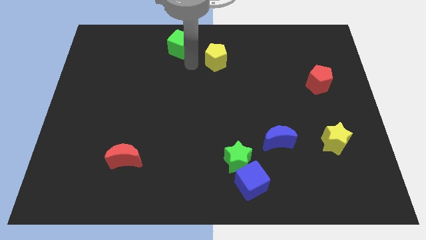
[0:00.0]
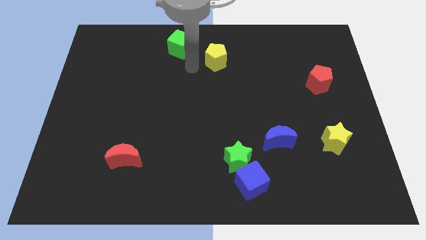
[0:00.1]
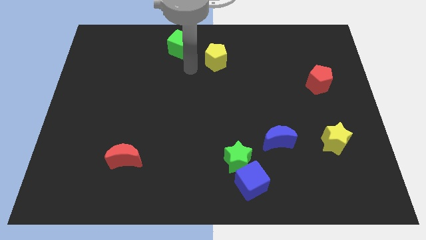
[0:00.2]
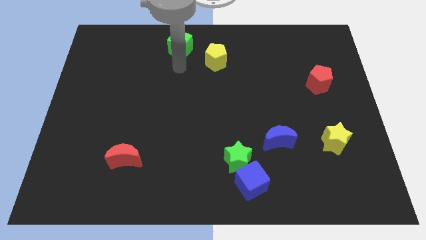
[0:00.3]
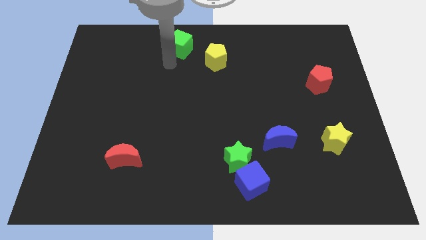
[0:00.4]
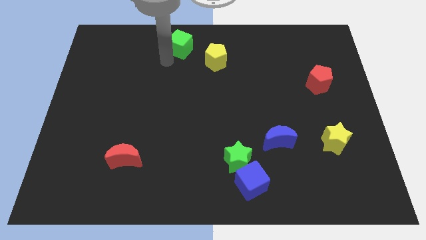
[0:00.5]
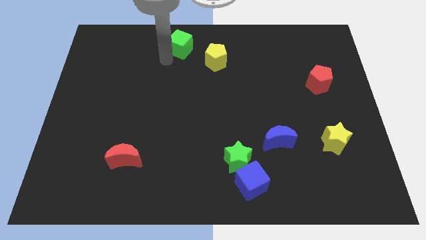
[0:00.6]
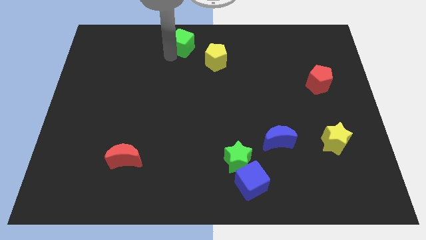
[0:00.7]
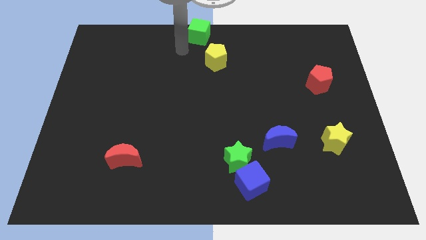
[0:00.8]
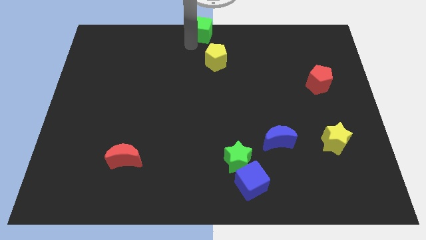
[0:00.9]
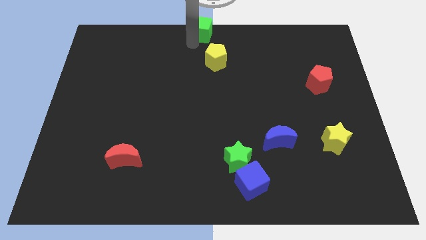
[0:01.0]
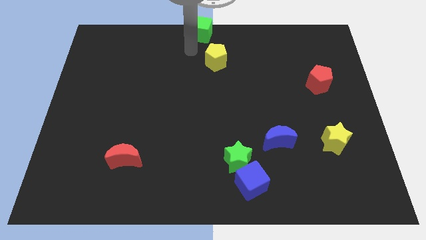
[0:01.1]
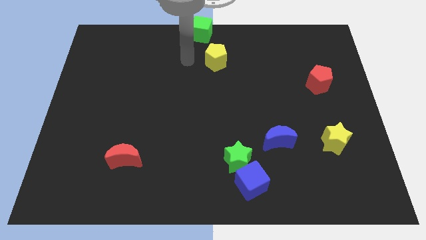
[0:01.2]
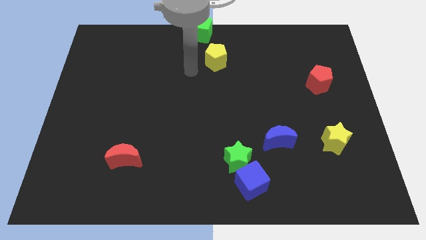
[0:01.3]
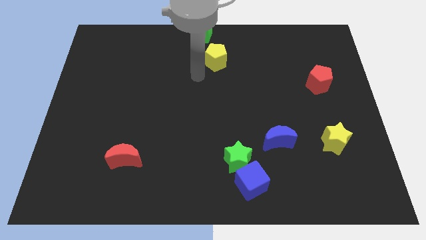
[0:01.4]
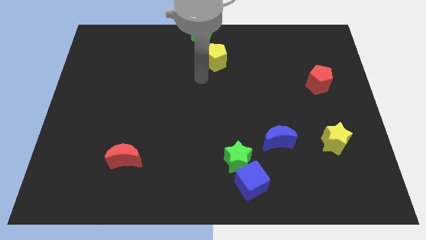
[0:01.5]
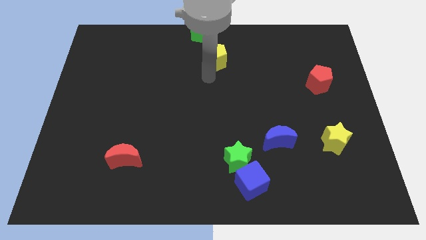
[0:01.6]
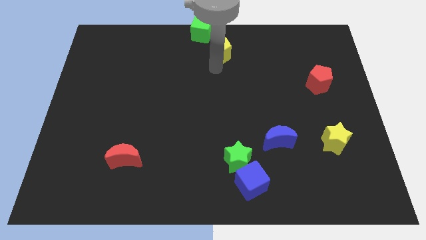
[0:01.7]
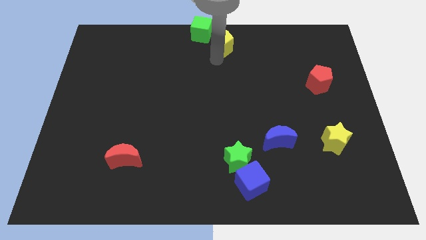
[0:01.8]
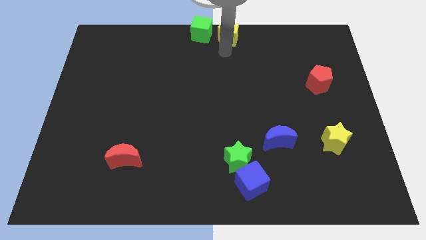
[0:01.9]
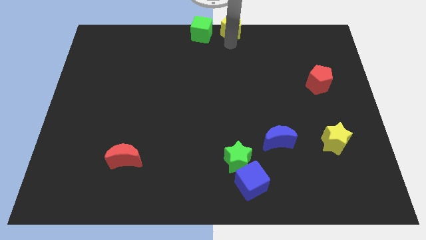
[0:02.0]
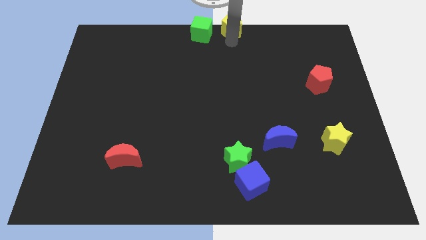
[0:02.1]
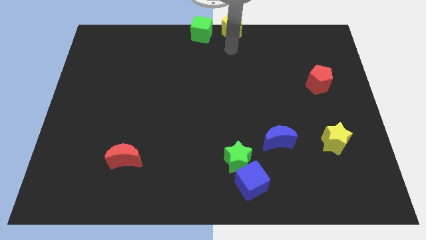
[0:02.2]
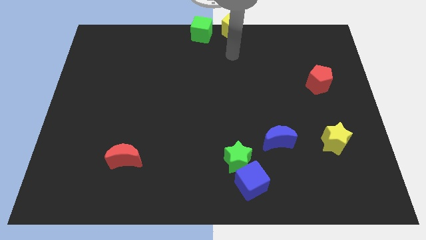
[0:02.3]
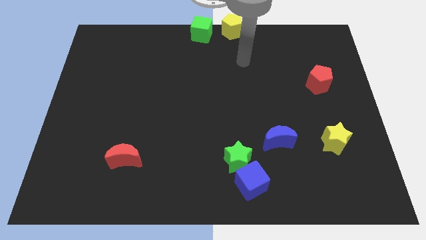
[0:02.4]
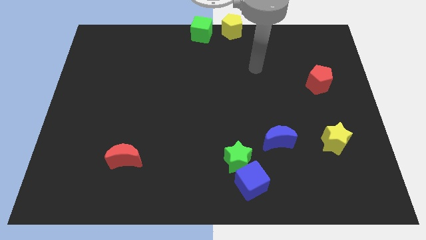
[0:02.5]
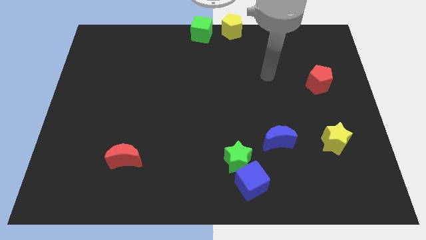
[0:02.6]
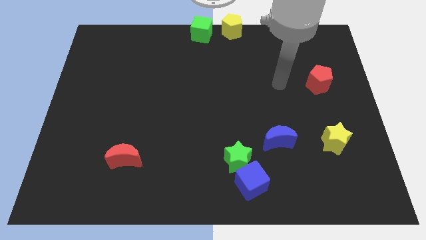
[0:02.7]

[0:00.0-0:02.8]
place the yellow pentagon and green cube to the top center

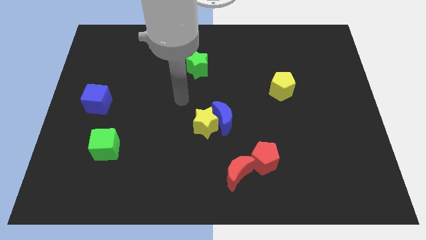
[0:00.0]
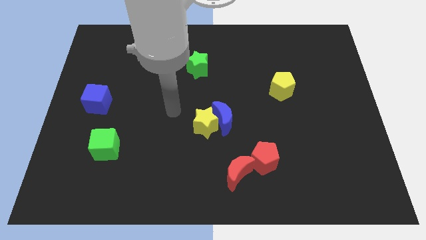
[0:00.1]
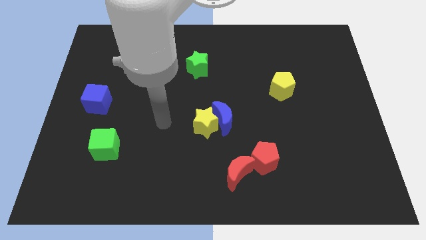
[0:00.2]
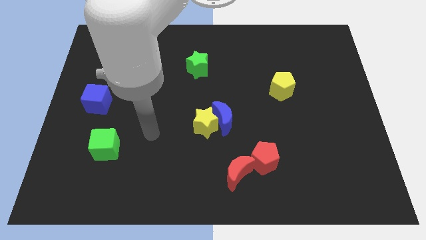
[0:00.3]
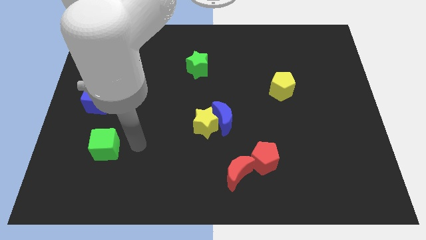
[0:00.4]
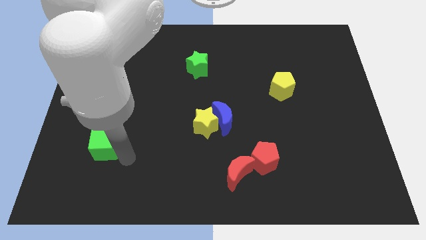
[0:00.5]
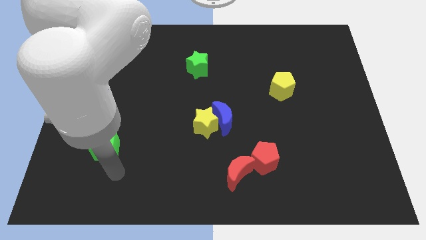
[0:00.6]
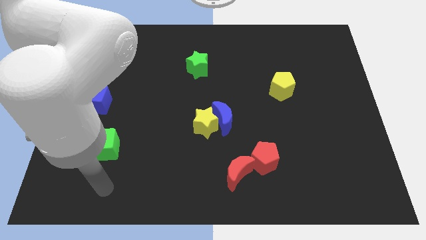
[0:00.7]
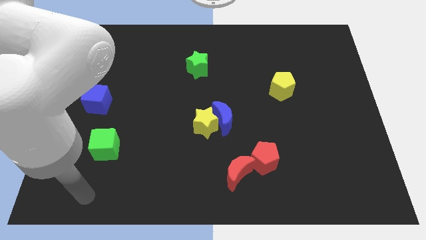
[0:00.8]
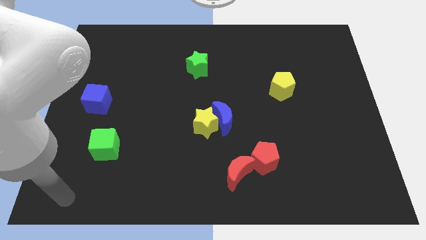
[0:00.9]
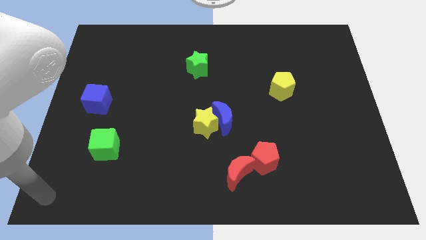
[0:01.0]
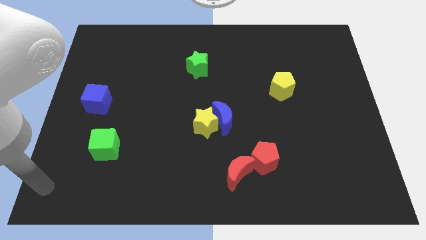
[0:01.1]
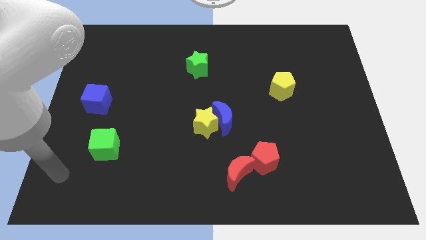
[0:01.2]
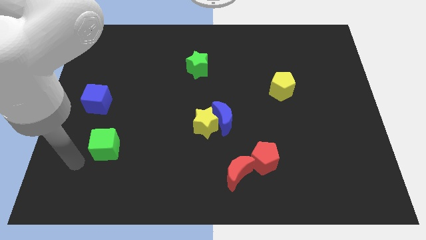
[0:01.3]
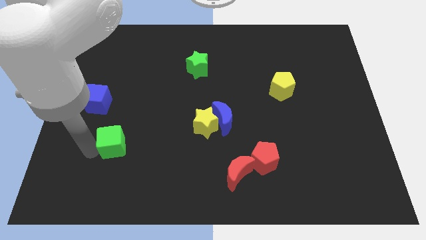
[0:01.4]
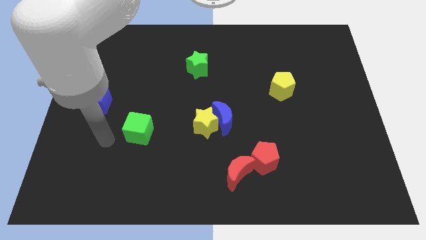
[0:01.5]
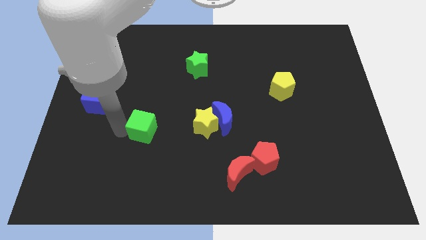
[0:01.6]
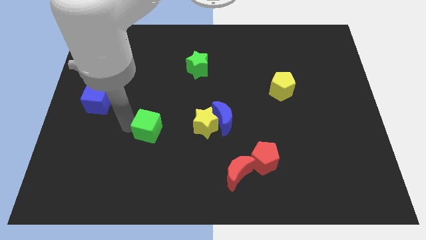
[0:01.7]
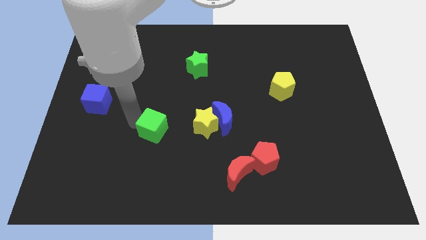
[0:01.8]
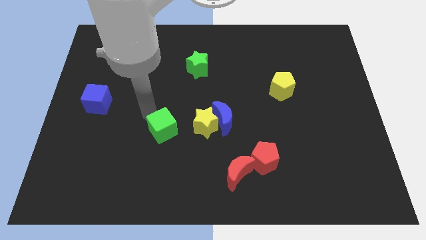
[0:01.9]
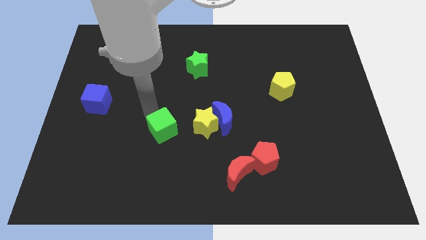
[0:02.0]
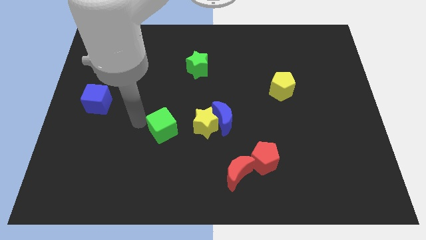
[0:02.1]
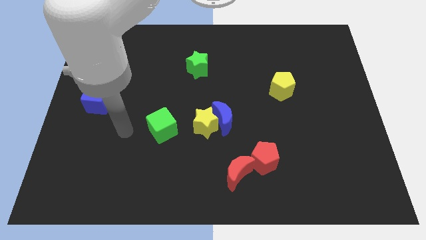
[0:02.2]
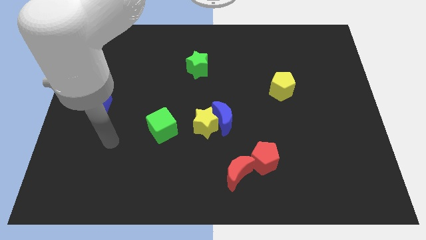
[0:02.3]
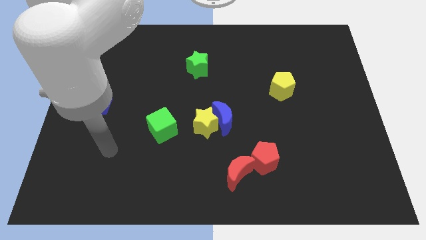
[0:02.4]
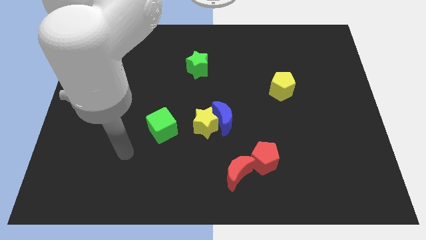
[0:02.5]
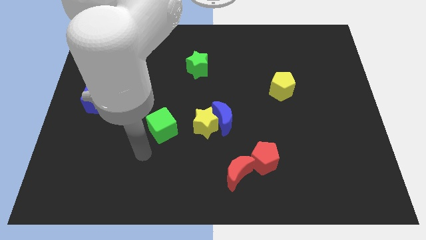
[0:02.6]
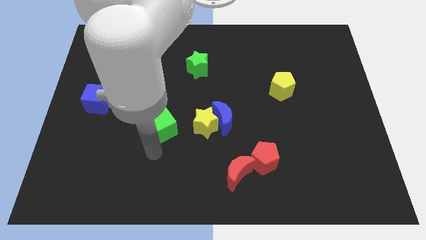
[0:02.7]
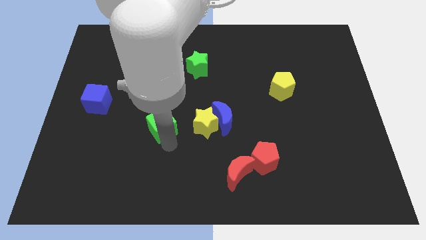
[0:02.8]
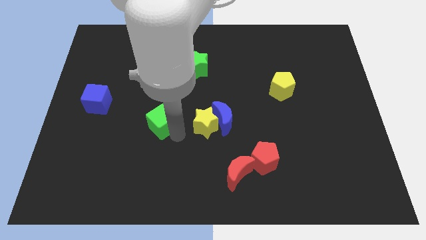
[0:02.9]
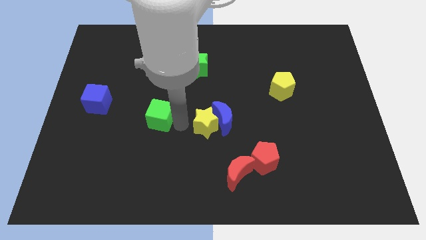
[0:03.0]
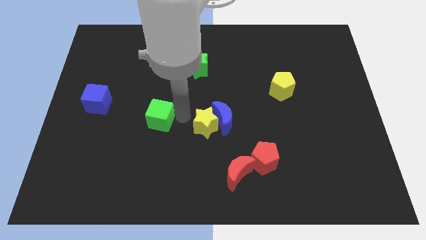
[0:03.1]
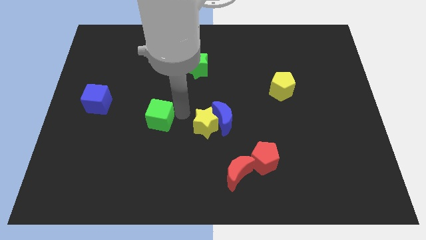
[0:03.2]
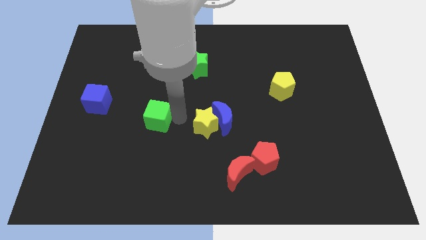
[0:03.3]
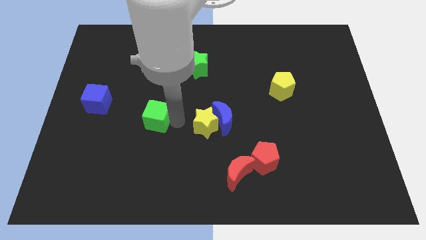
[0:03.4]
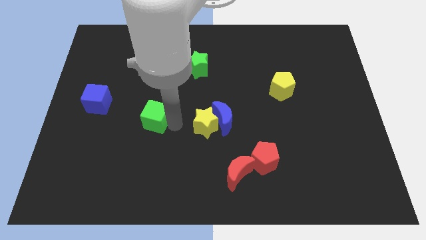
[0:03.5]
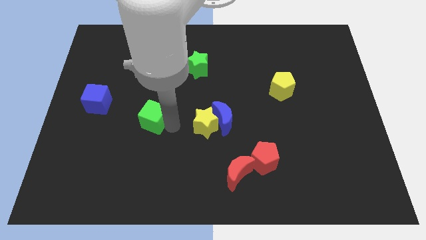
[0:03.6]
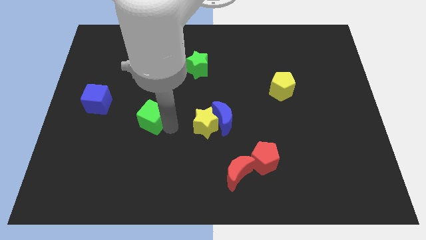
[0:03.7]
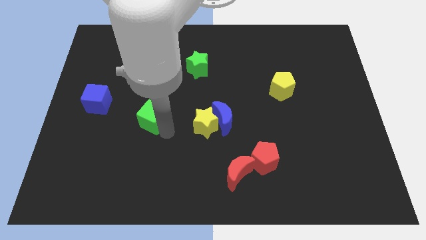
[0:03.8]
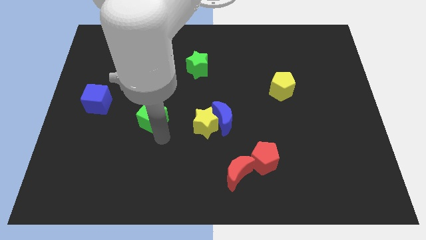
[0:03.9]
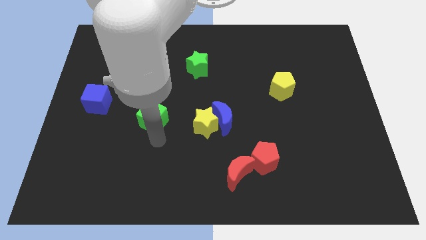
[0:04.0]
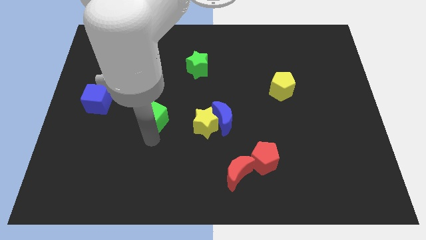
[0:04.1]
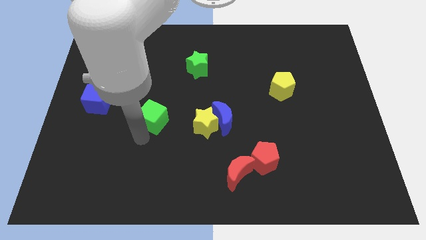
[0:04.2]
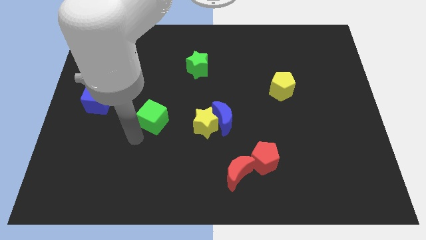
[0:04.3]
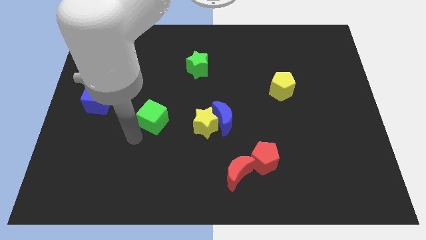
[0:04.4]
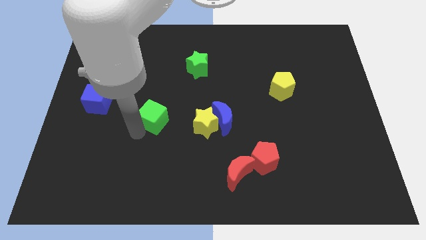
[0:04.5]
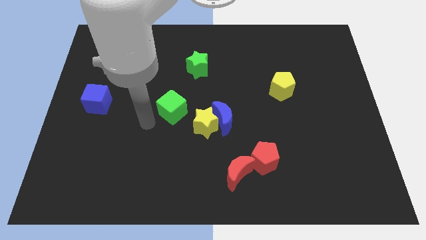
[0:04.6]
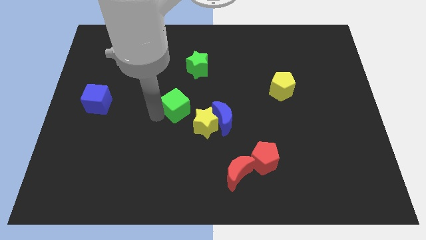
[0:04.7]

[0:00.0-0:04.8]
put the green cube parallel to the right to the blue cube

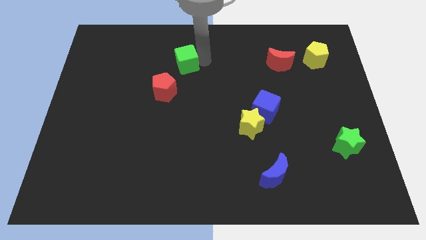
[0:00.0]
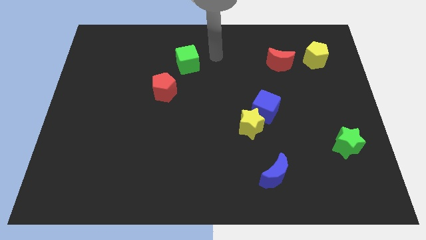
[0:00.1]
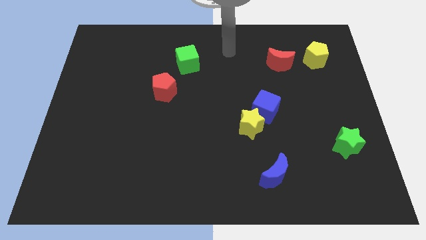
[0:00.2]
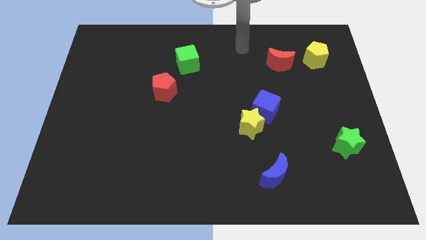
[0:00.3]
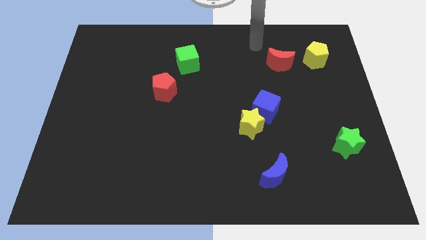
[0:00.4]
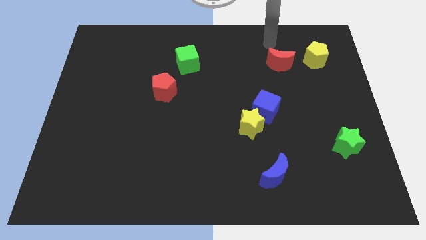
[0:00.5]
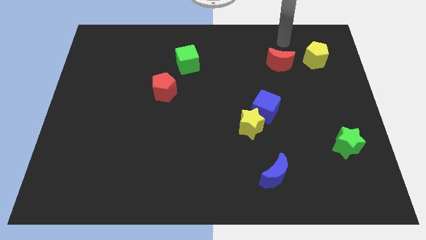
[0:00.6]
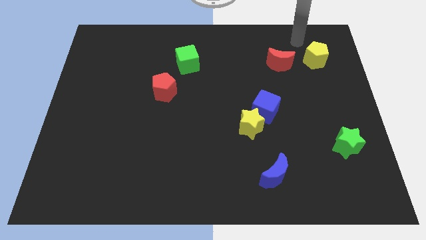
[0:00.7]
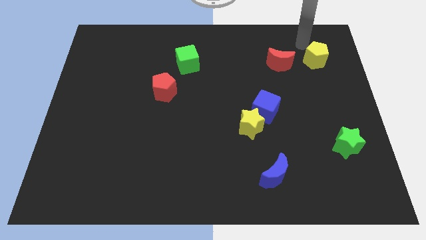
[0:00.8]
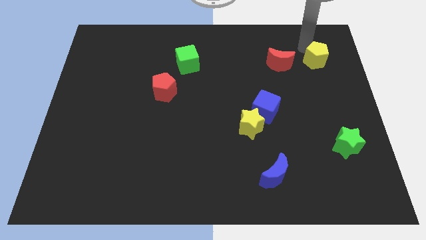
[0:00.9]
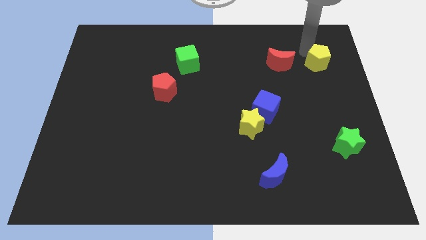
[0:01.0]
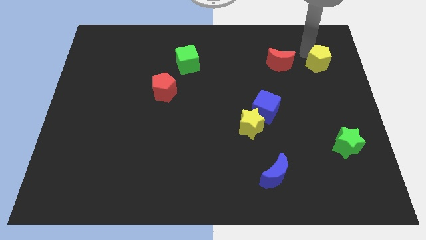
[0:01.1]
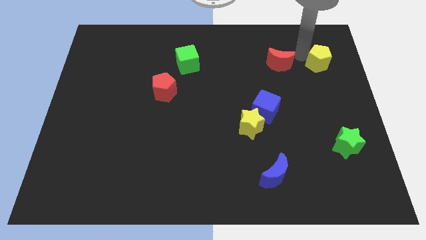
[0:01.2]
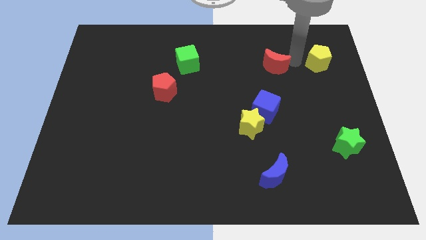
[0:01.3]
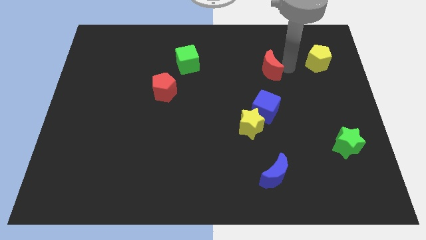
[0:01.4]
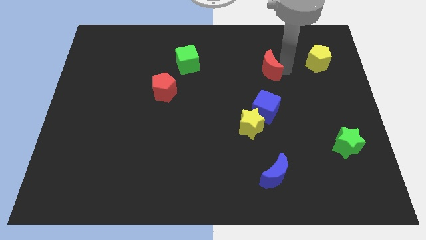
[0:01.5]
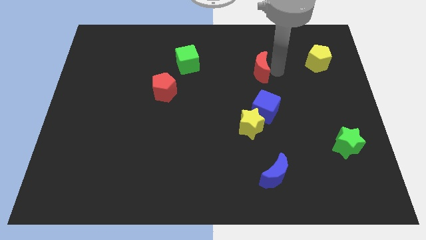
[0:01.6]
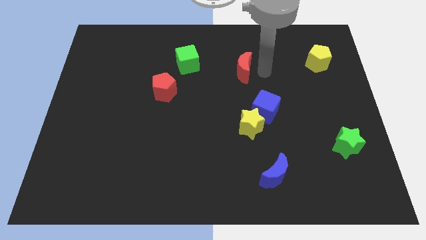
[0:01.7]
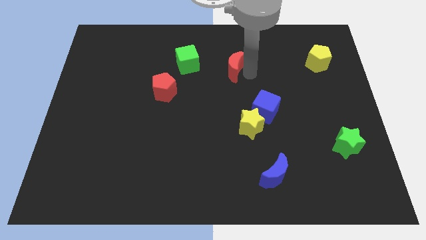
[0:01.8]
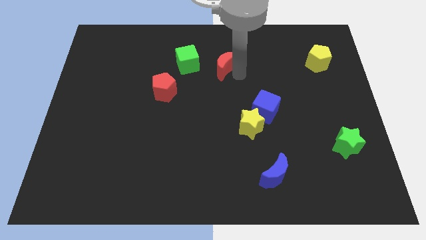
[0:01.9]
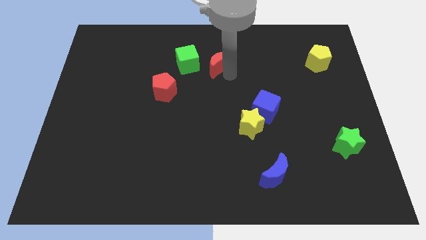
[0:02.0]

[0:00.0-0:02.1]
push the red crescent diagonal to blue cube
